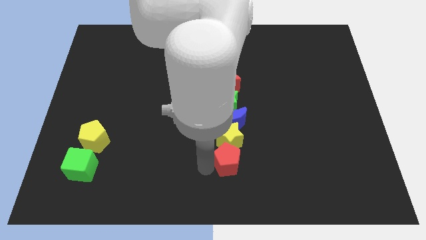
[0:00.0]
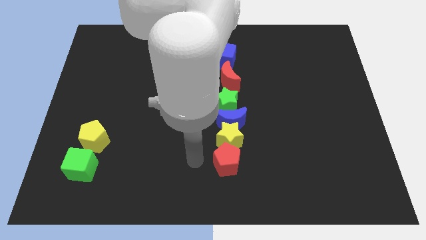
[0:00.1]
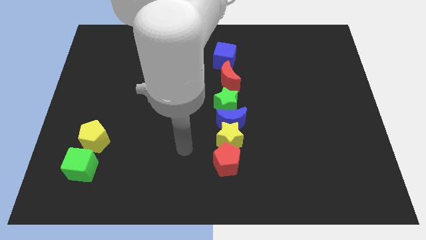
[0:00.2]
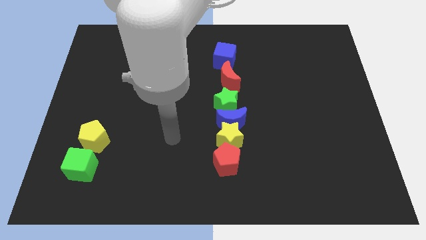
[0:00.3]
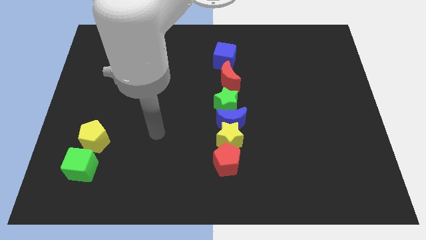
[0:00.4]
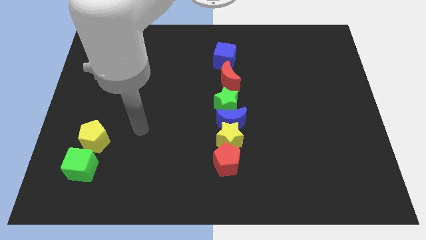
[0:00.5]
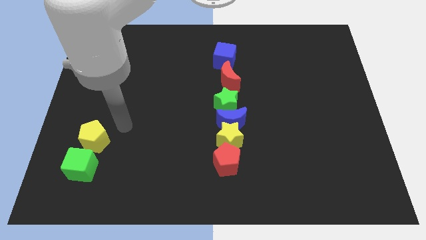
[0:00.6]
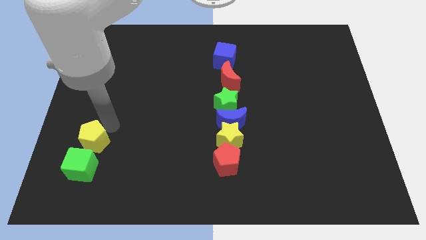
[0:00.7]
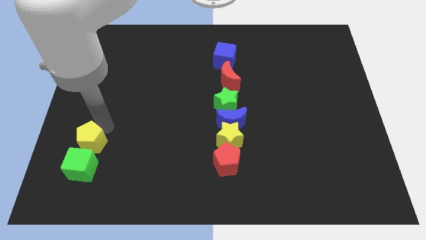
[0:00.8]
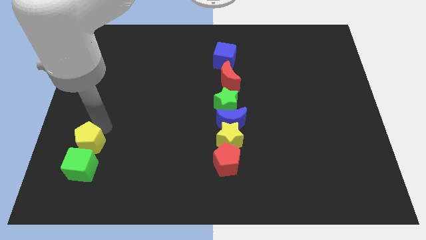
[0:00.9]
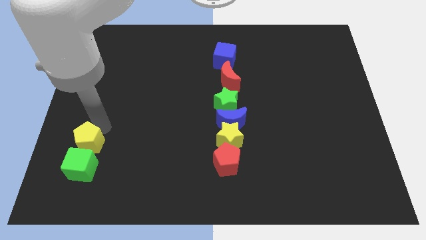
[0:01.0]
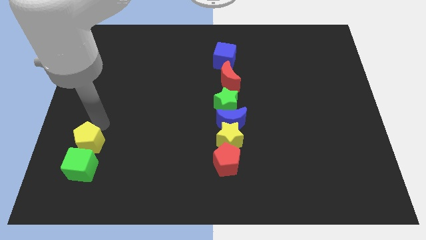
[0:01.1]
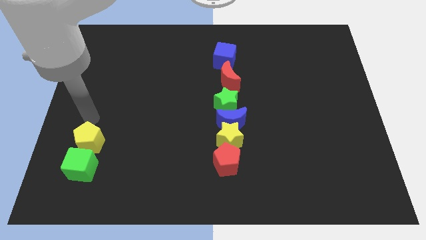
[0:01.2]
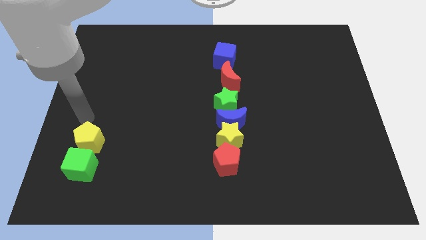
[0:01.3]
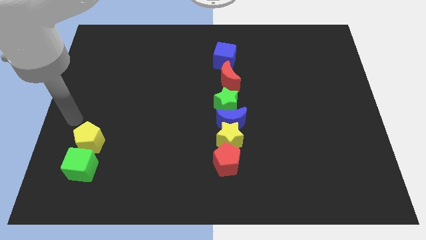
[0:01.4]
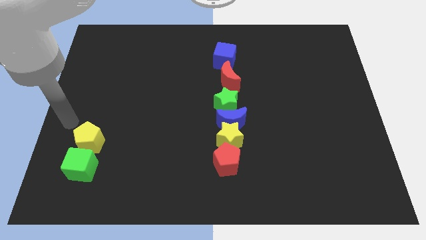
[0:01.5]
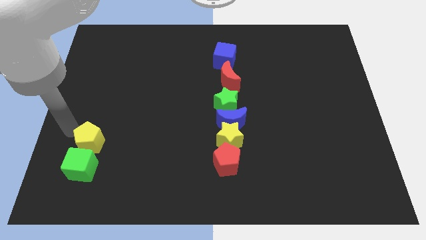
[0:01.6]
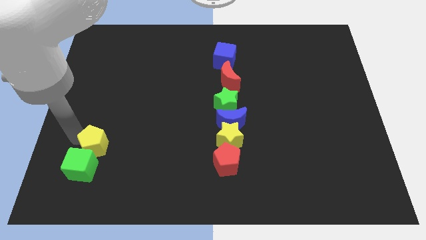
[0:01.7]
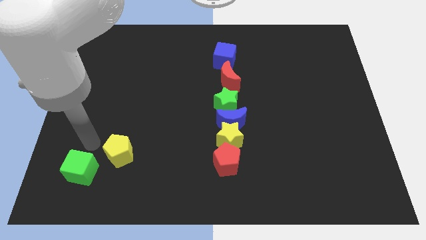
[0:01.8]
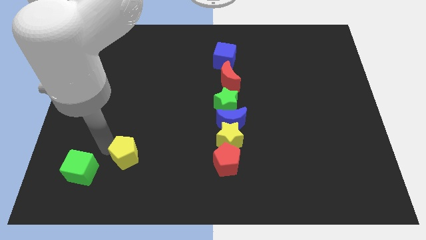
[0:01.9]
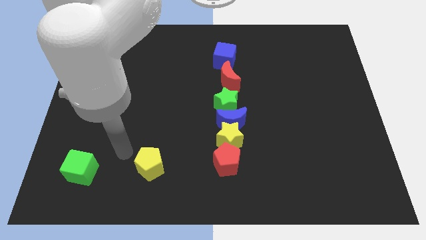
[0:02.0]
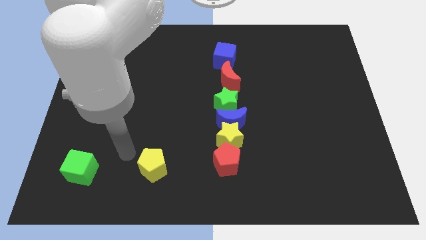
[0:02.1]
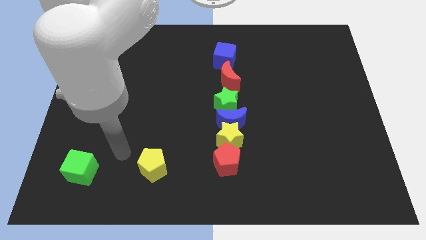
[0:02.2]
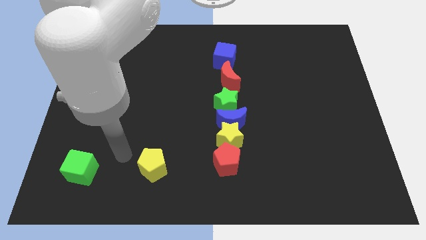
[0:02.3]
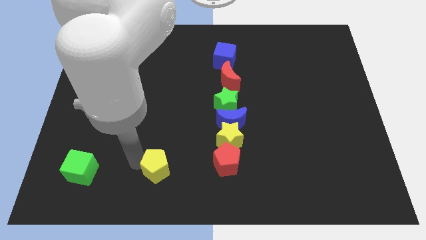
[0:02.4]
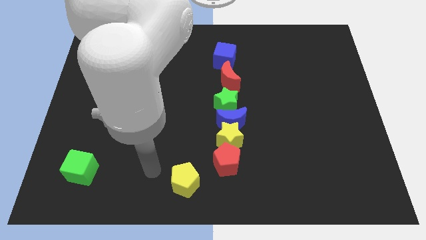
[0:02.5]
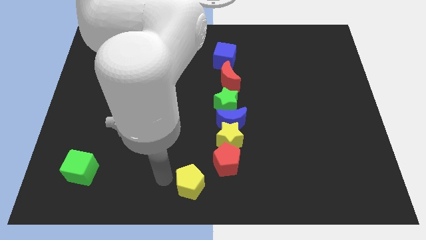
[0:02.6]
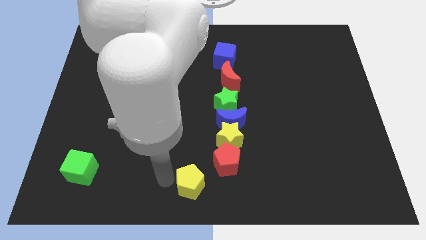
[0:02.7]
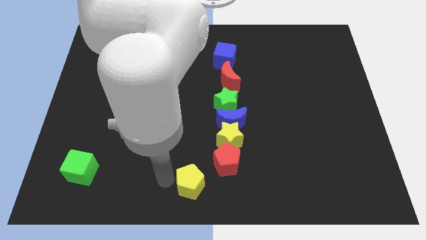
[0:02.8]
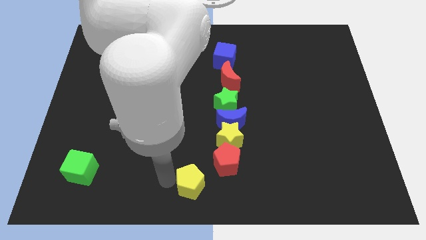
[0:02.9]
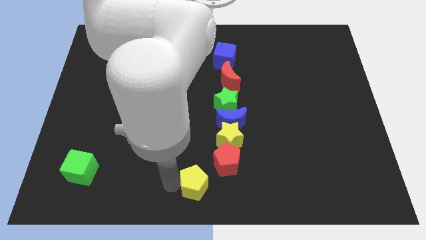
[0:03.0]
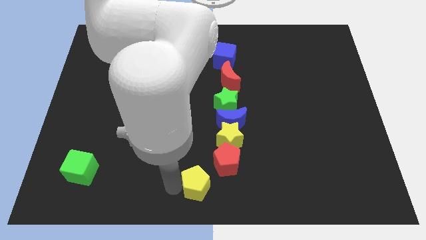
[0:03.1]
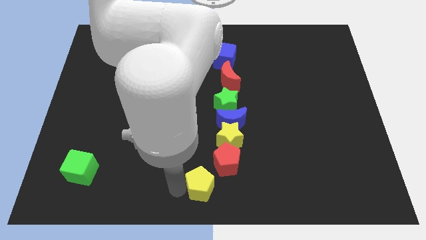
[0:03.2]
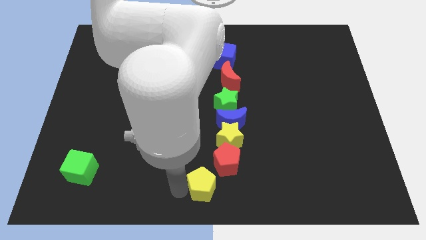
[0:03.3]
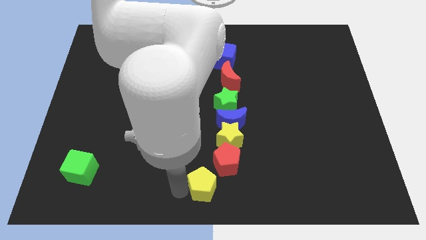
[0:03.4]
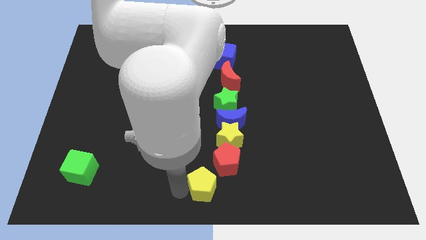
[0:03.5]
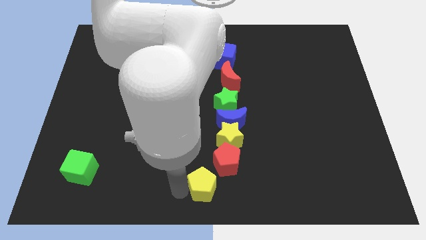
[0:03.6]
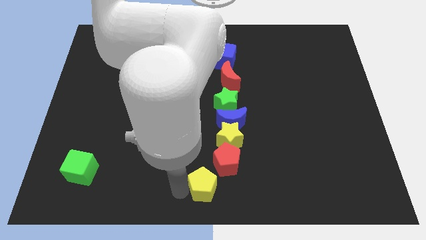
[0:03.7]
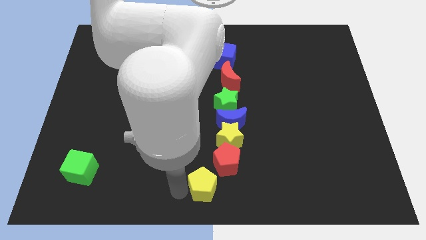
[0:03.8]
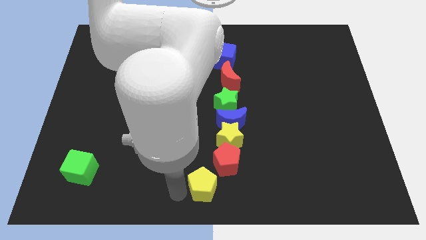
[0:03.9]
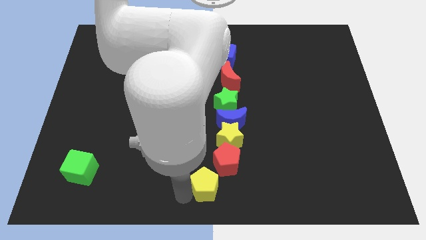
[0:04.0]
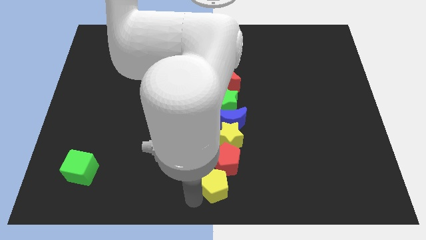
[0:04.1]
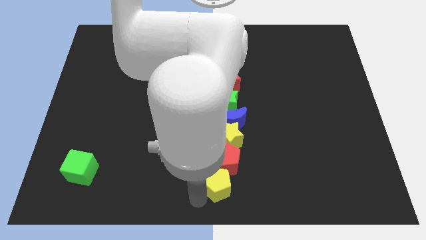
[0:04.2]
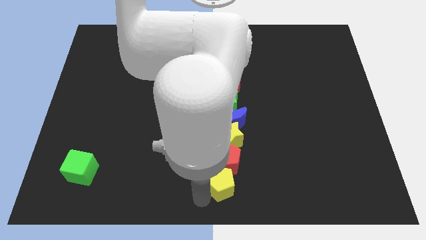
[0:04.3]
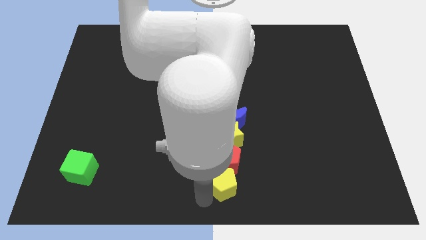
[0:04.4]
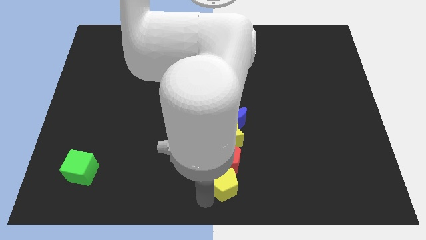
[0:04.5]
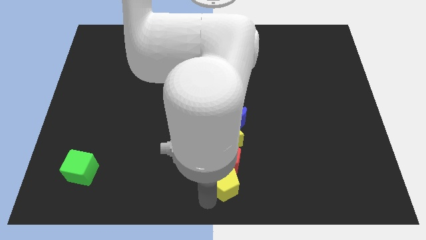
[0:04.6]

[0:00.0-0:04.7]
put the yellow pentagon at the bottom of red pentagon

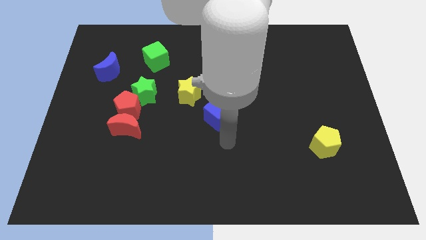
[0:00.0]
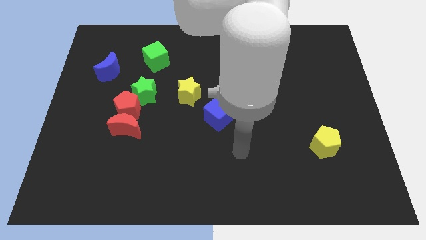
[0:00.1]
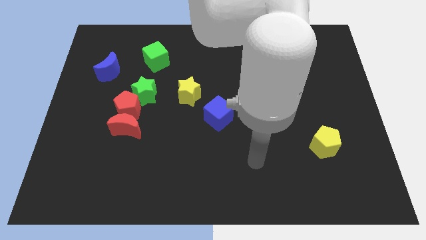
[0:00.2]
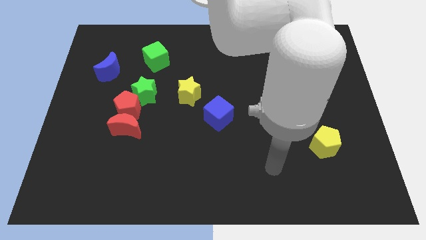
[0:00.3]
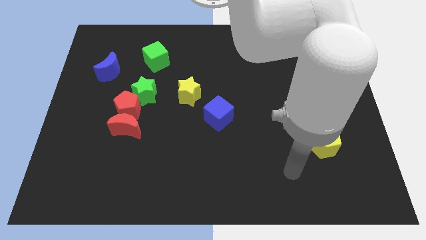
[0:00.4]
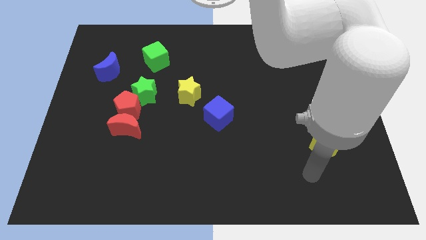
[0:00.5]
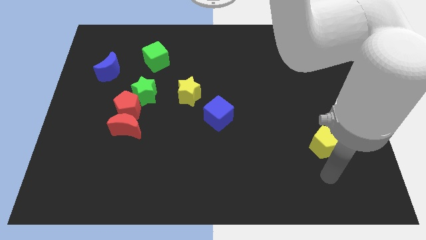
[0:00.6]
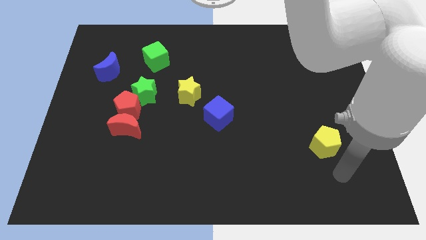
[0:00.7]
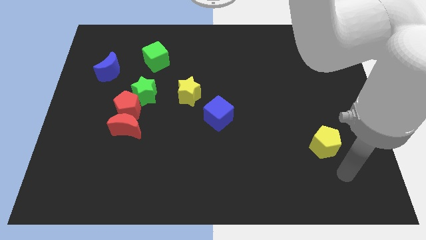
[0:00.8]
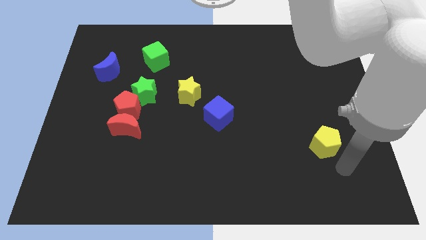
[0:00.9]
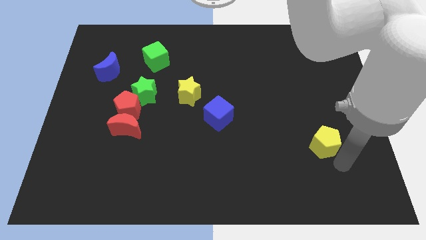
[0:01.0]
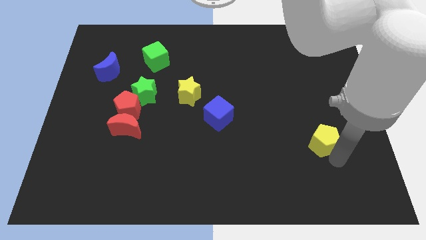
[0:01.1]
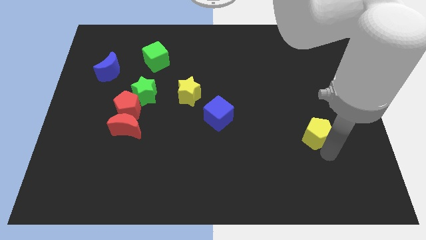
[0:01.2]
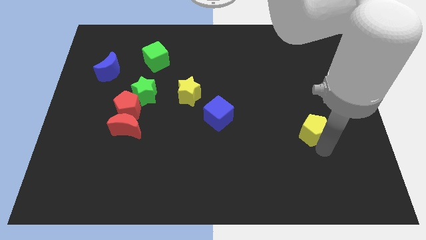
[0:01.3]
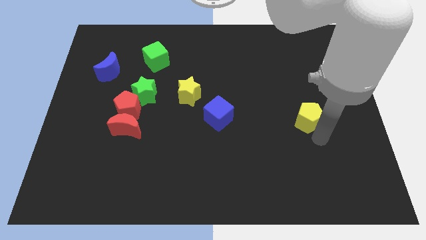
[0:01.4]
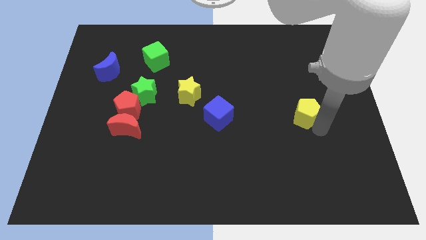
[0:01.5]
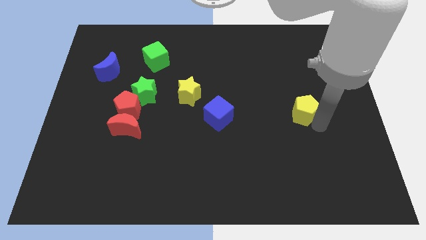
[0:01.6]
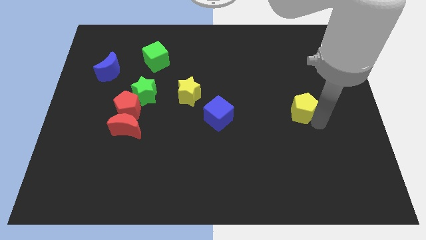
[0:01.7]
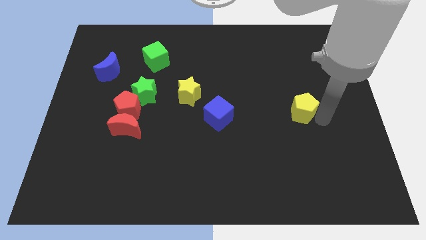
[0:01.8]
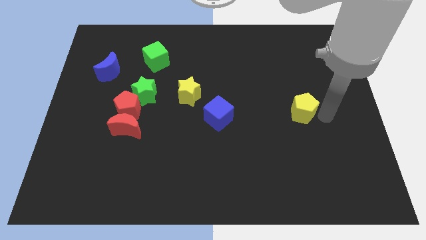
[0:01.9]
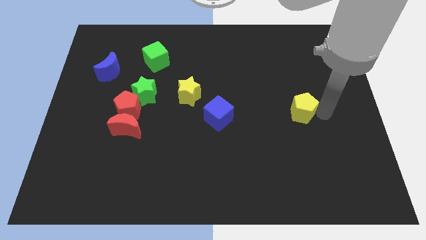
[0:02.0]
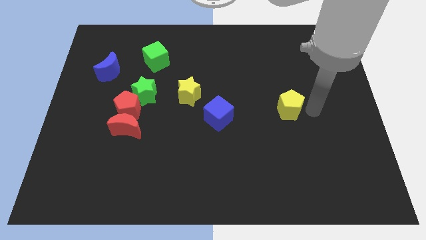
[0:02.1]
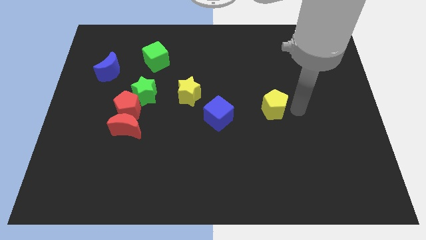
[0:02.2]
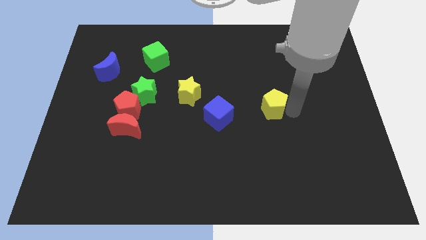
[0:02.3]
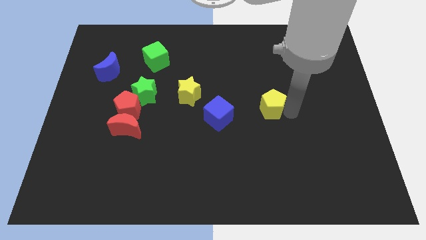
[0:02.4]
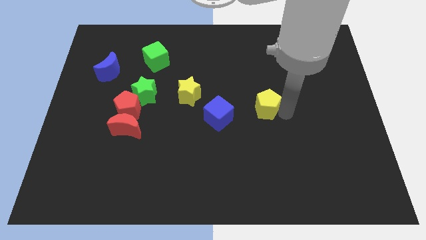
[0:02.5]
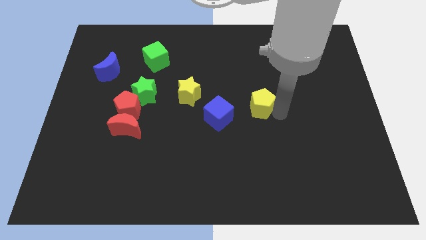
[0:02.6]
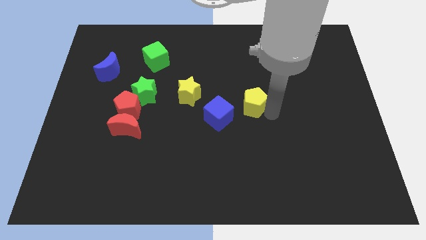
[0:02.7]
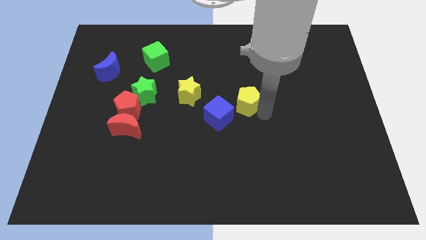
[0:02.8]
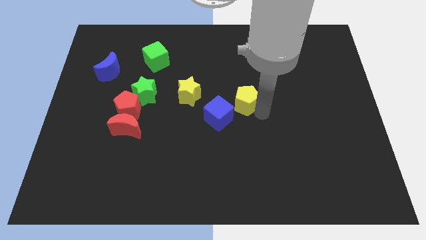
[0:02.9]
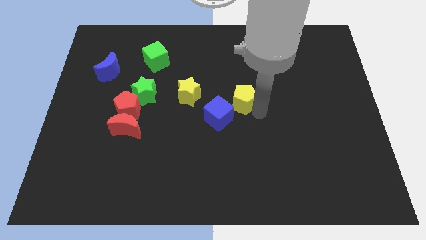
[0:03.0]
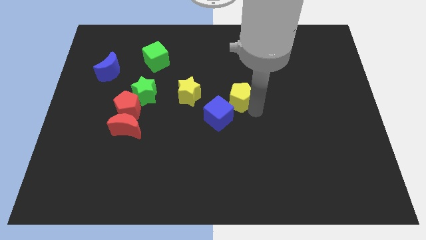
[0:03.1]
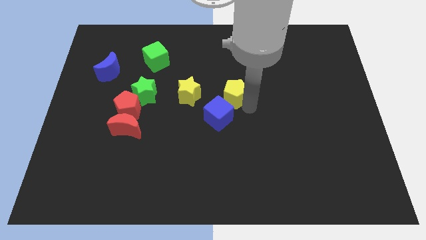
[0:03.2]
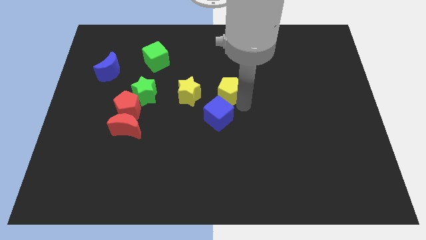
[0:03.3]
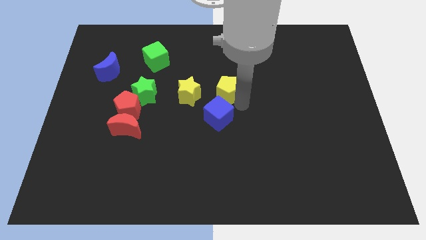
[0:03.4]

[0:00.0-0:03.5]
place the yellow pentagon to the right side of yellow star

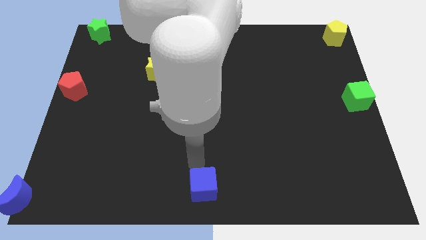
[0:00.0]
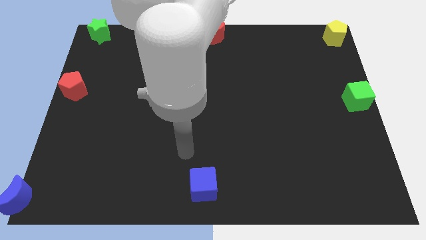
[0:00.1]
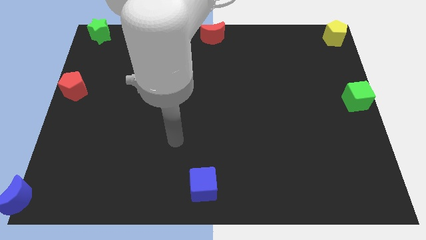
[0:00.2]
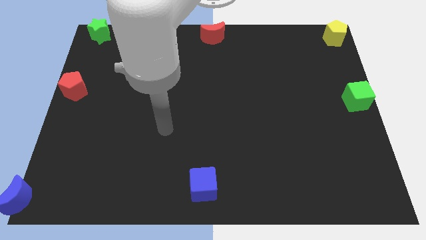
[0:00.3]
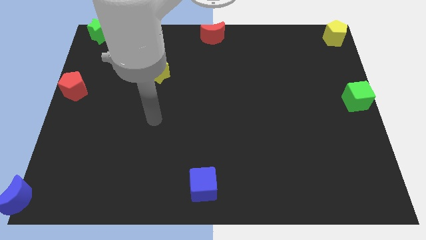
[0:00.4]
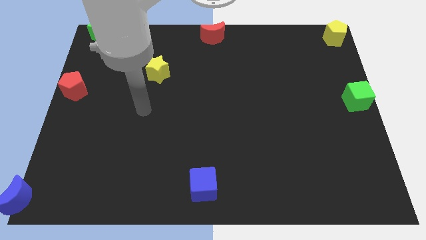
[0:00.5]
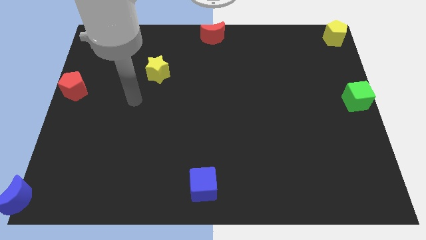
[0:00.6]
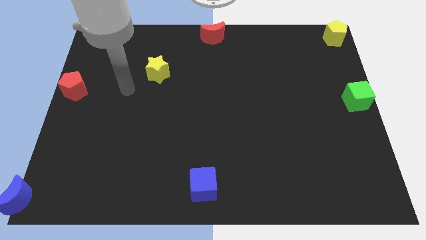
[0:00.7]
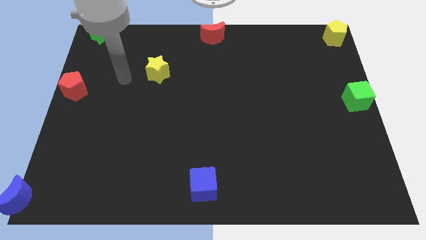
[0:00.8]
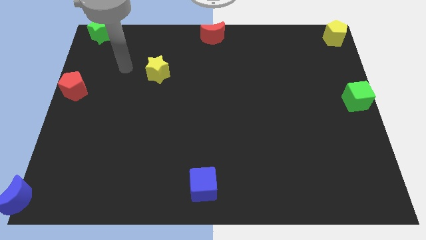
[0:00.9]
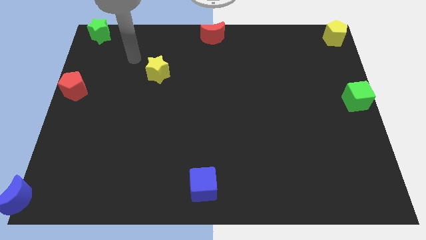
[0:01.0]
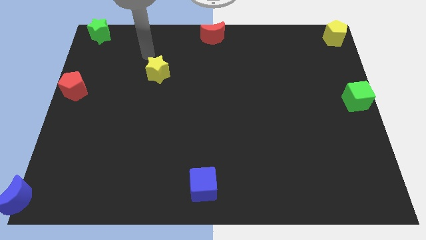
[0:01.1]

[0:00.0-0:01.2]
move the arm away from the blue cube
